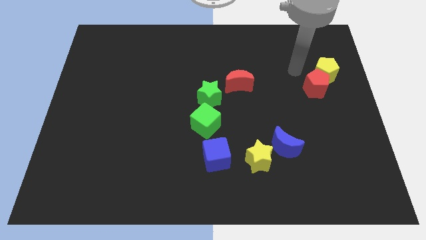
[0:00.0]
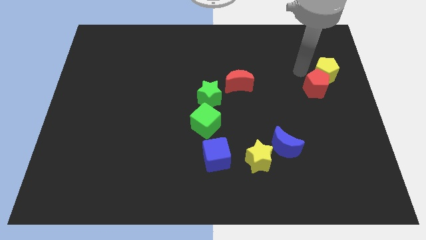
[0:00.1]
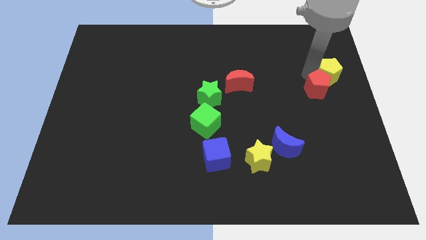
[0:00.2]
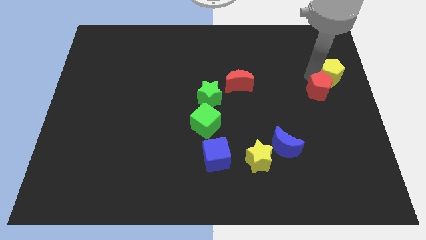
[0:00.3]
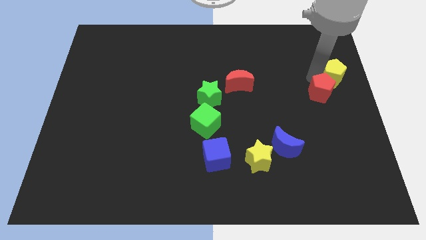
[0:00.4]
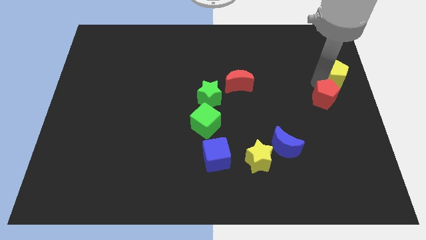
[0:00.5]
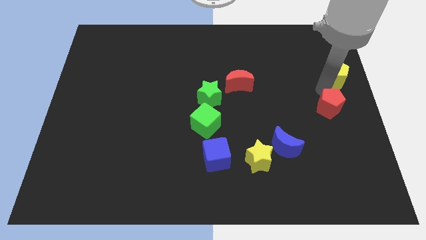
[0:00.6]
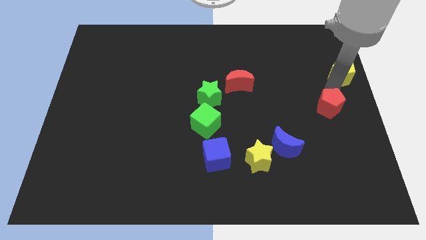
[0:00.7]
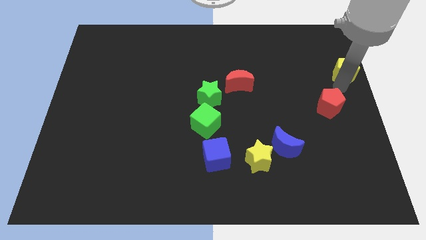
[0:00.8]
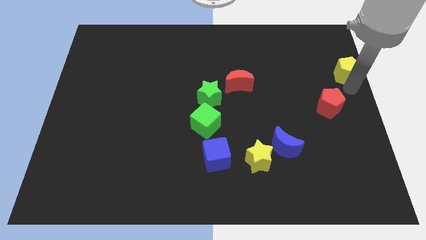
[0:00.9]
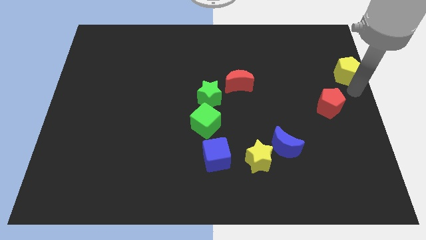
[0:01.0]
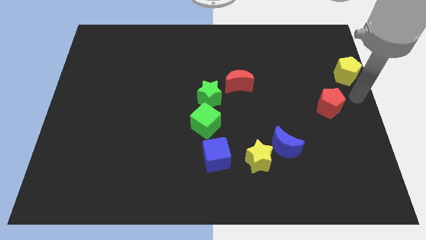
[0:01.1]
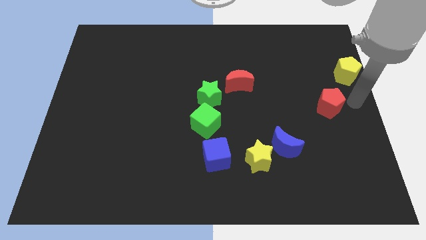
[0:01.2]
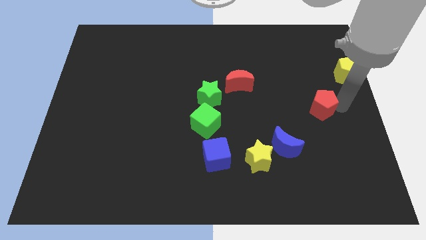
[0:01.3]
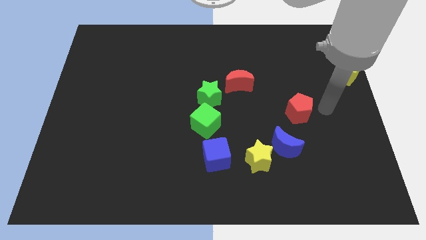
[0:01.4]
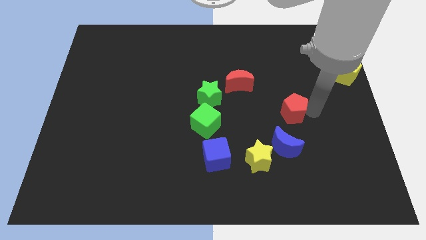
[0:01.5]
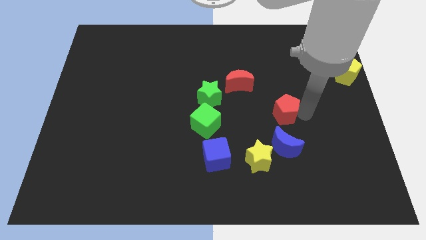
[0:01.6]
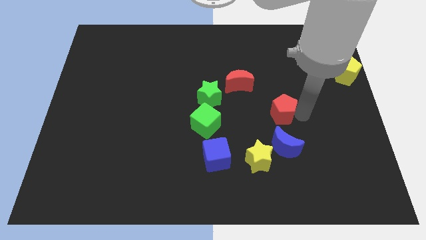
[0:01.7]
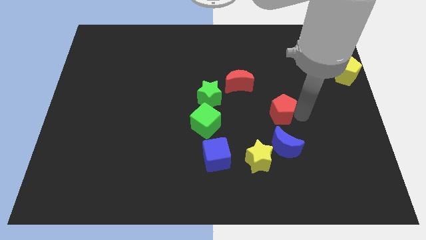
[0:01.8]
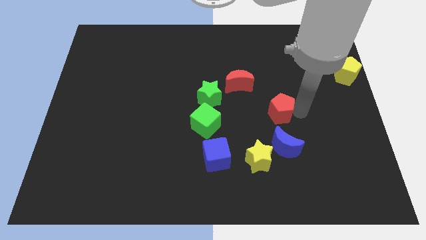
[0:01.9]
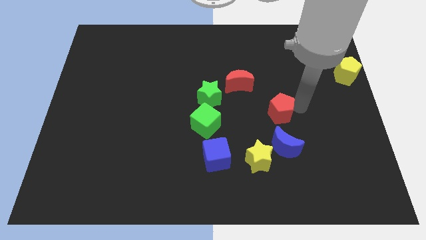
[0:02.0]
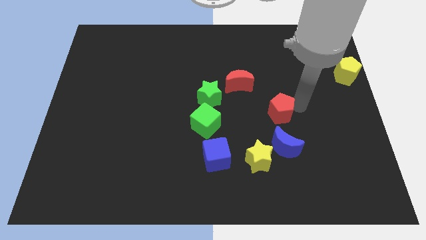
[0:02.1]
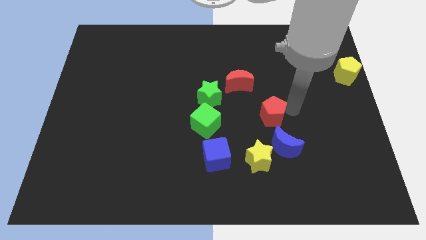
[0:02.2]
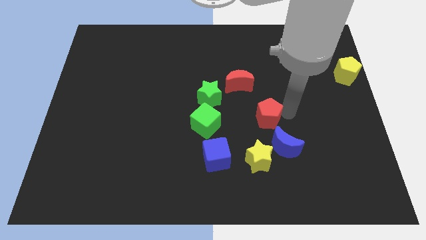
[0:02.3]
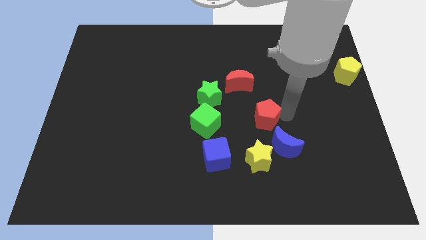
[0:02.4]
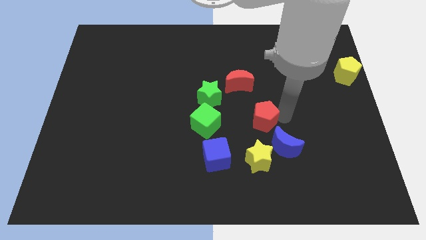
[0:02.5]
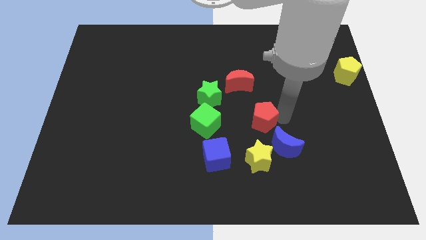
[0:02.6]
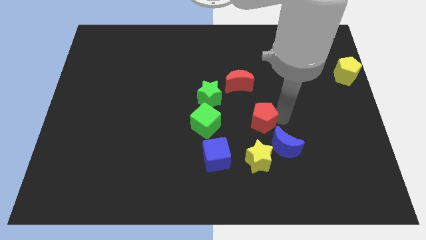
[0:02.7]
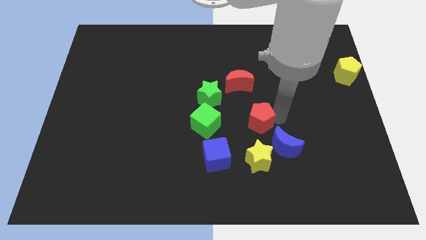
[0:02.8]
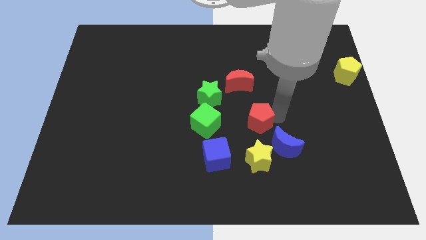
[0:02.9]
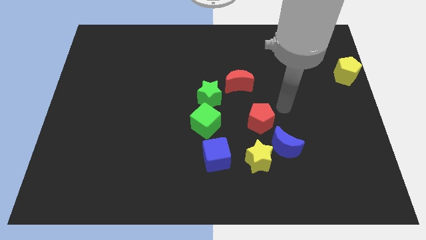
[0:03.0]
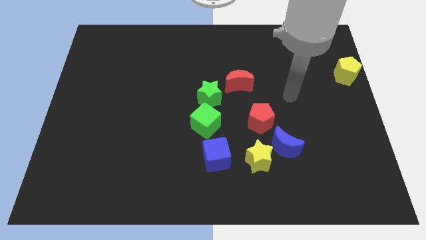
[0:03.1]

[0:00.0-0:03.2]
separate red pentagon and yellow pentagon from each other

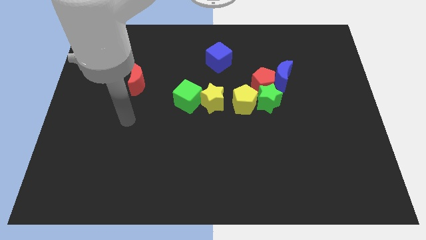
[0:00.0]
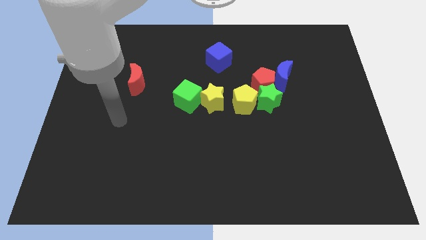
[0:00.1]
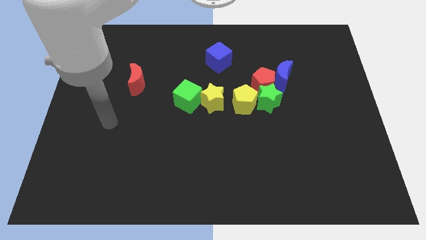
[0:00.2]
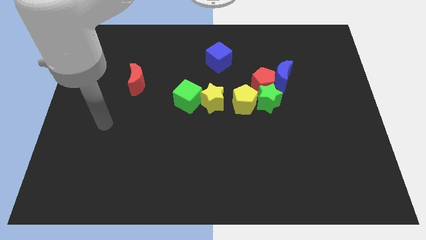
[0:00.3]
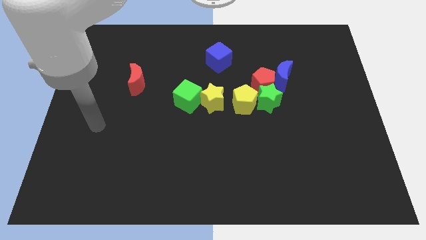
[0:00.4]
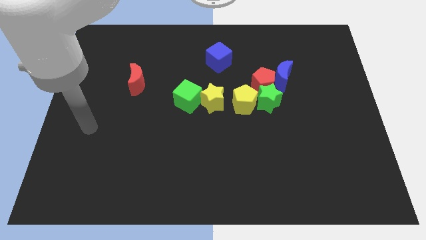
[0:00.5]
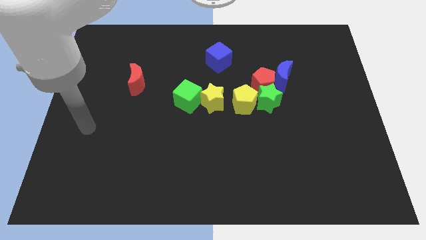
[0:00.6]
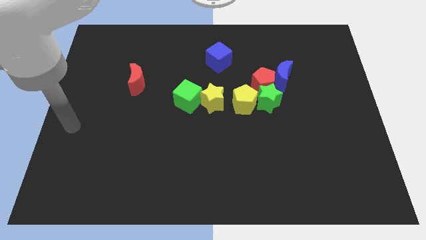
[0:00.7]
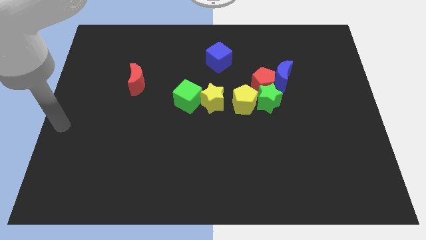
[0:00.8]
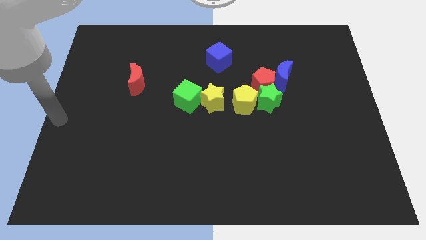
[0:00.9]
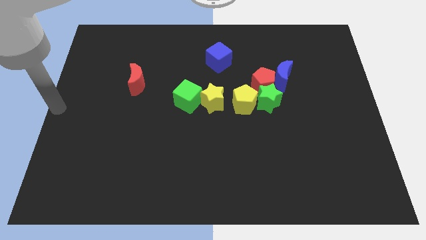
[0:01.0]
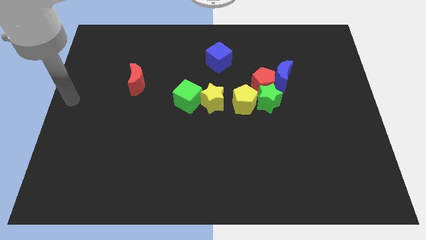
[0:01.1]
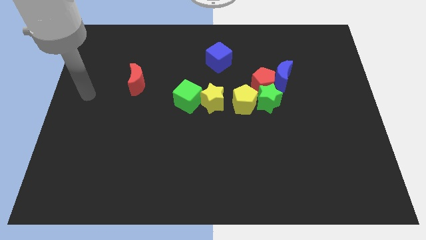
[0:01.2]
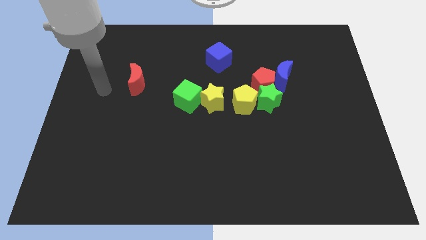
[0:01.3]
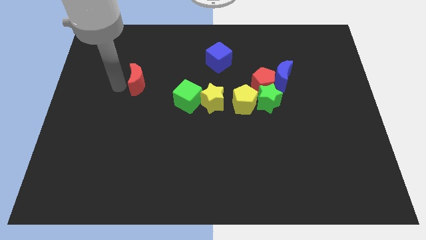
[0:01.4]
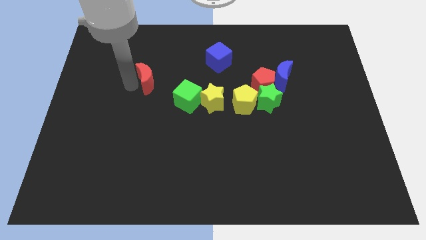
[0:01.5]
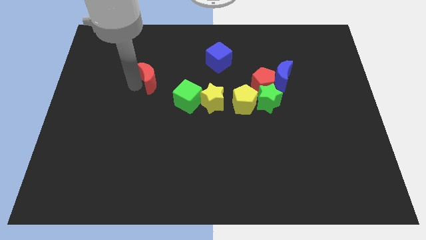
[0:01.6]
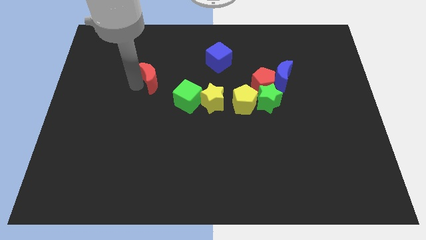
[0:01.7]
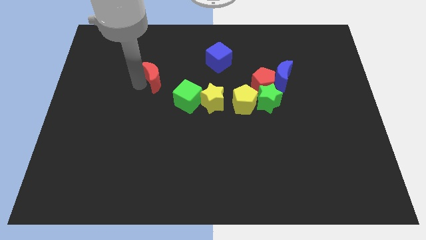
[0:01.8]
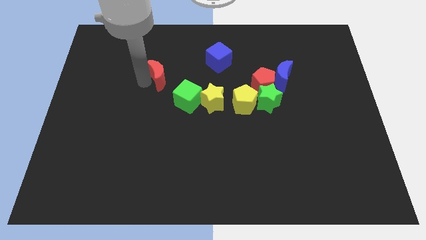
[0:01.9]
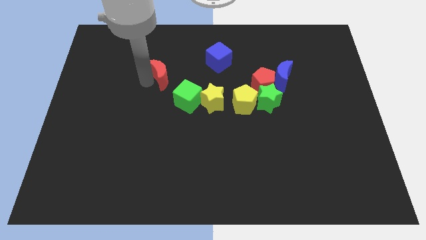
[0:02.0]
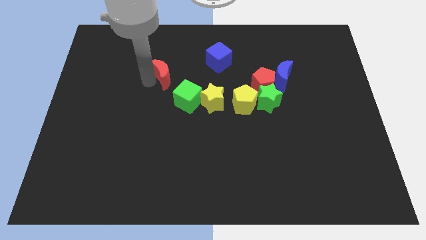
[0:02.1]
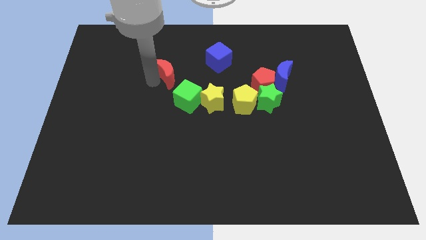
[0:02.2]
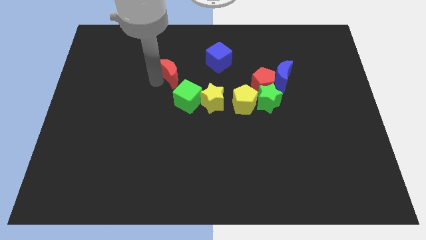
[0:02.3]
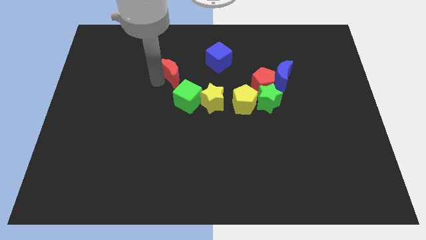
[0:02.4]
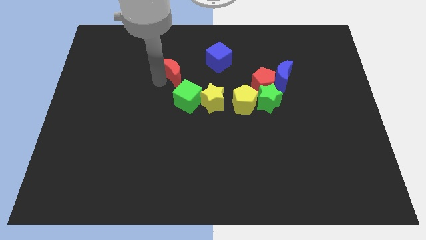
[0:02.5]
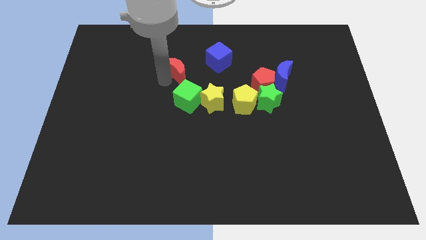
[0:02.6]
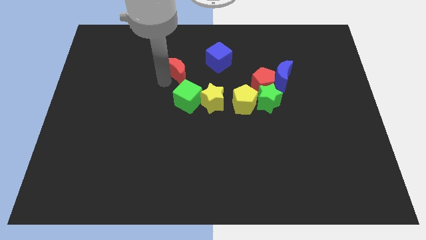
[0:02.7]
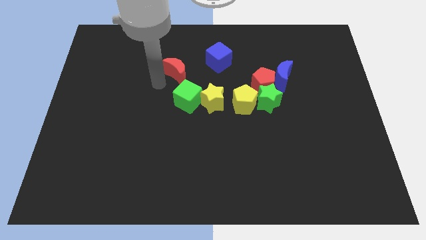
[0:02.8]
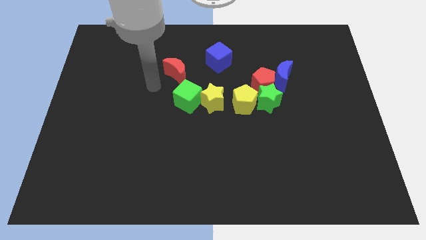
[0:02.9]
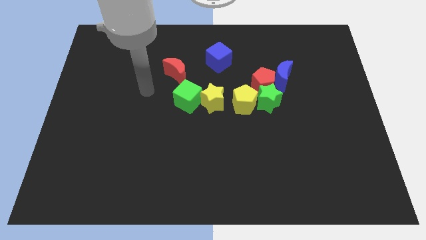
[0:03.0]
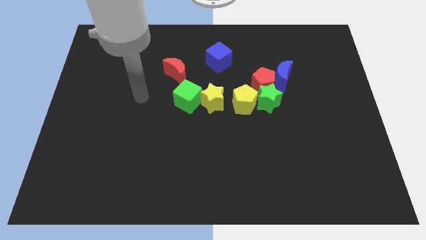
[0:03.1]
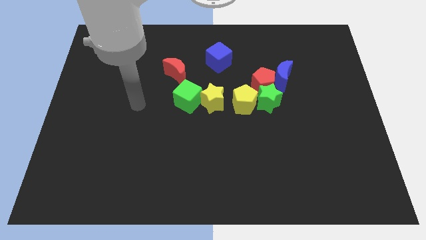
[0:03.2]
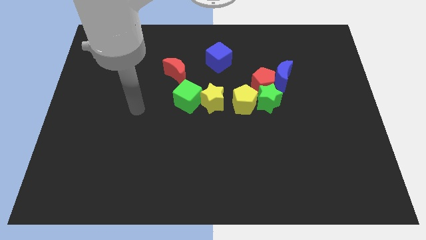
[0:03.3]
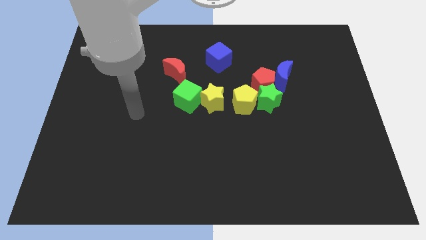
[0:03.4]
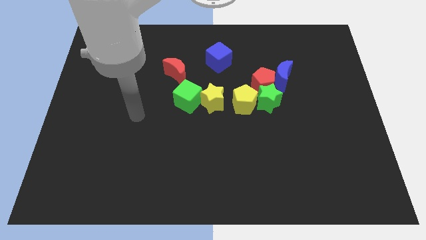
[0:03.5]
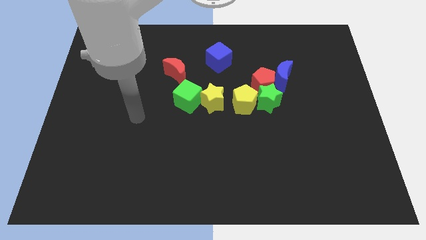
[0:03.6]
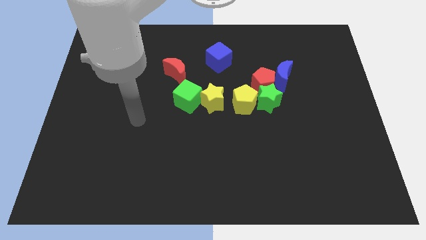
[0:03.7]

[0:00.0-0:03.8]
push the red crescent towards the blue cube

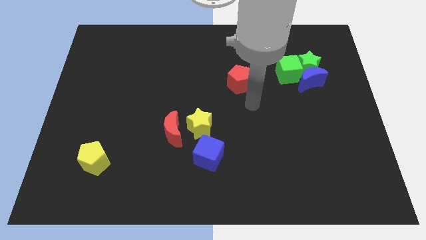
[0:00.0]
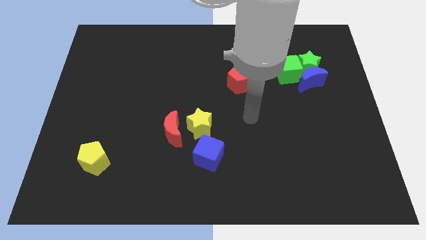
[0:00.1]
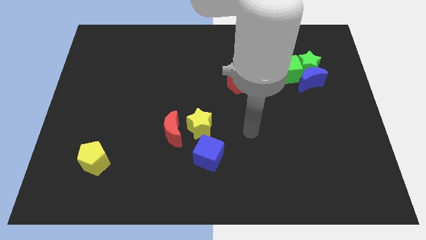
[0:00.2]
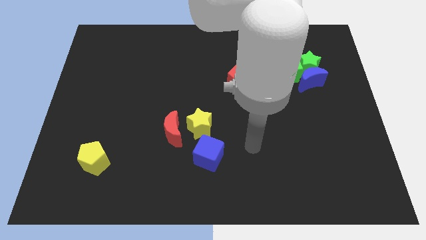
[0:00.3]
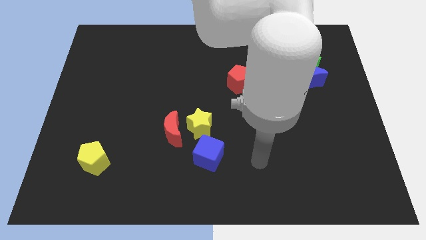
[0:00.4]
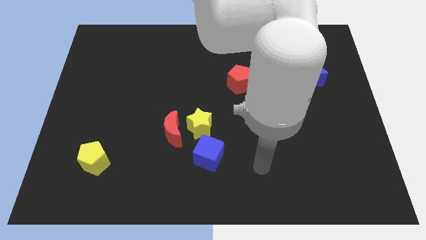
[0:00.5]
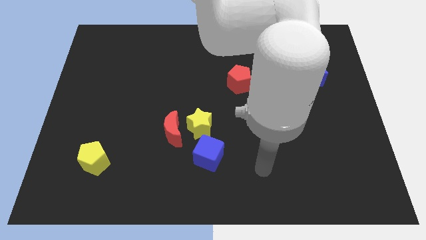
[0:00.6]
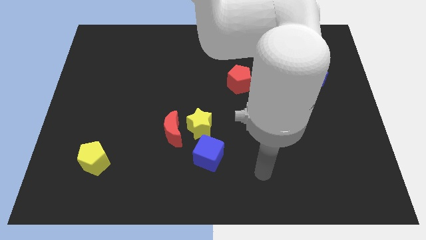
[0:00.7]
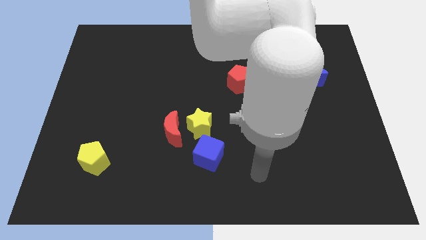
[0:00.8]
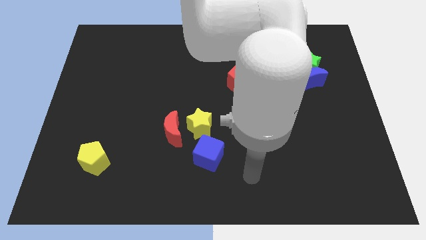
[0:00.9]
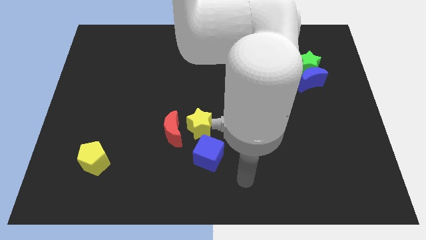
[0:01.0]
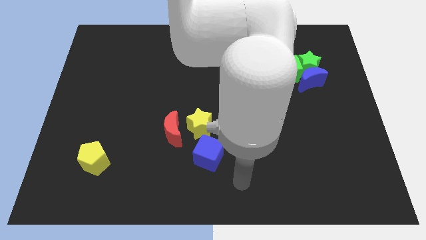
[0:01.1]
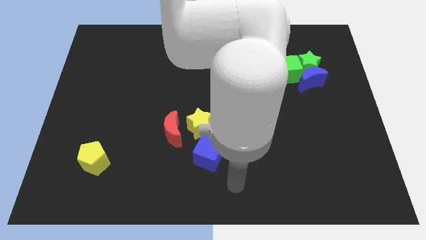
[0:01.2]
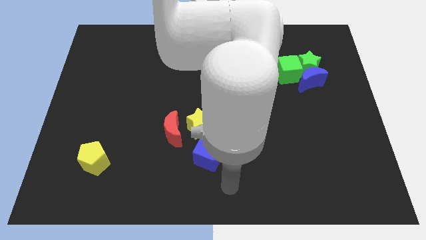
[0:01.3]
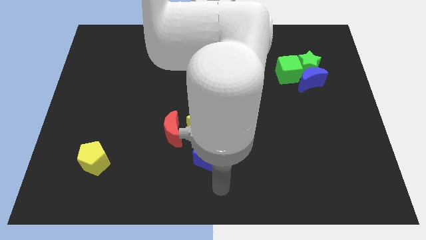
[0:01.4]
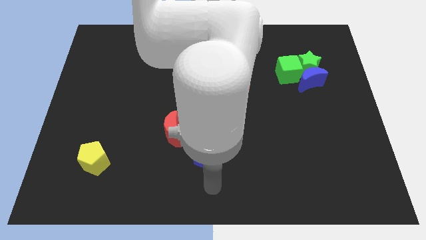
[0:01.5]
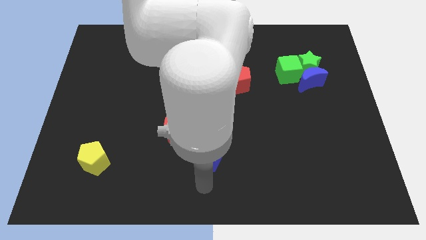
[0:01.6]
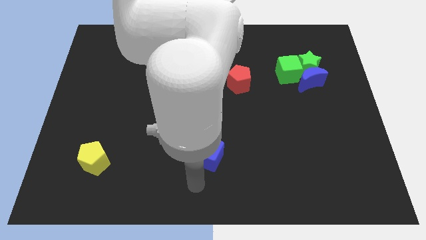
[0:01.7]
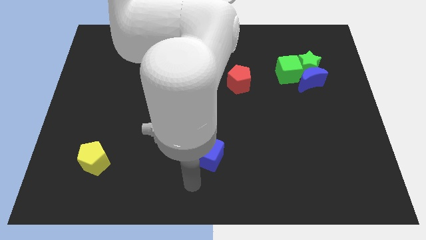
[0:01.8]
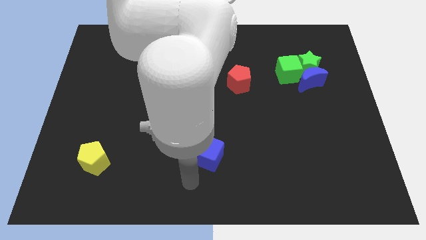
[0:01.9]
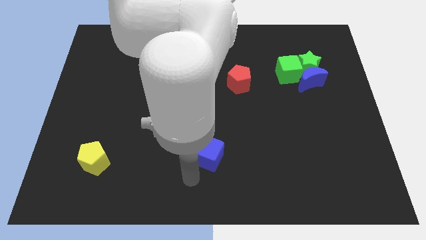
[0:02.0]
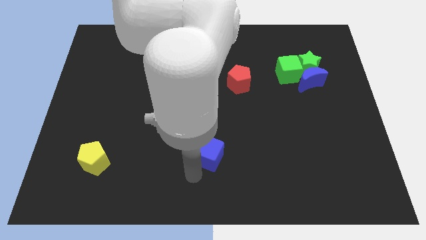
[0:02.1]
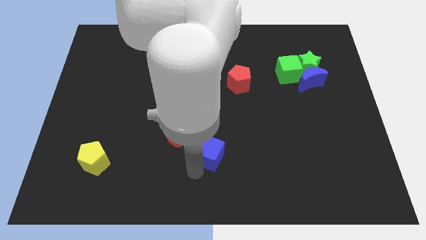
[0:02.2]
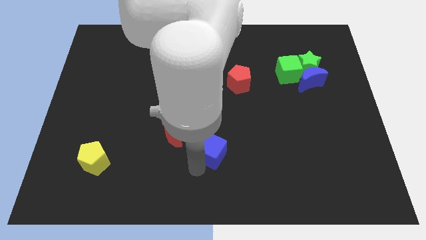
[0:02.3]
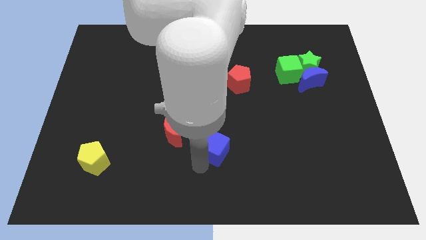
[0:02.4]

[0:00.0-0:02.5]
go and push the blue cube upwards
